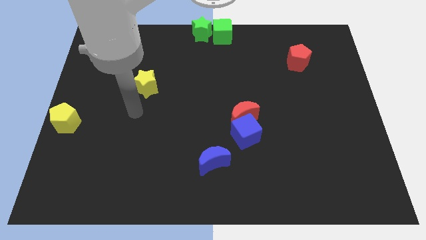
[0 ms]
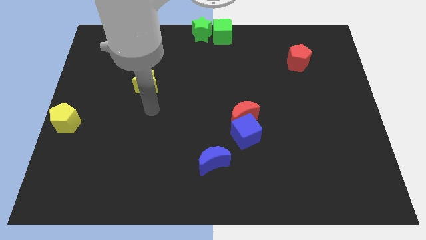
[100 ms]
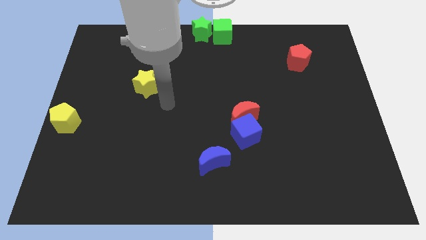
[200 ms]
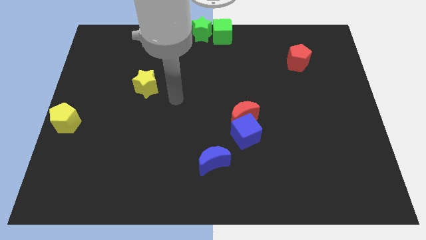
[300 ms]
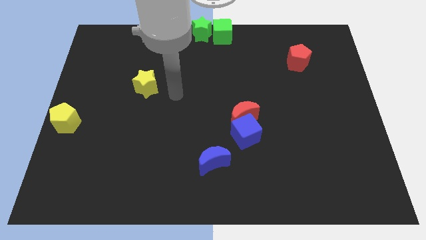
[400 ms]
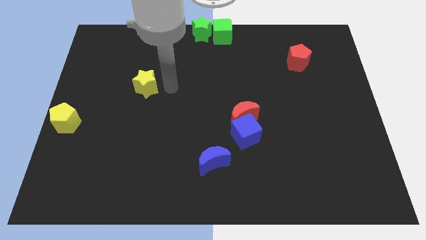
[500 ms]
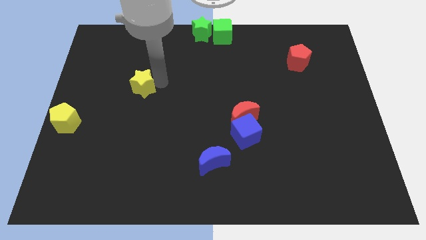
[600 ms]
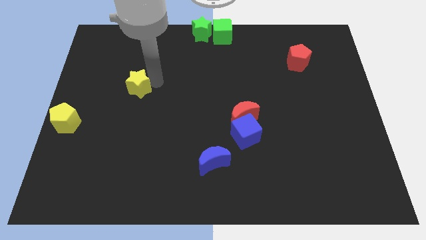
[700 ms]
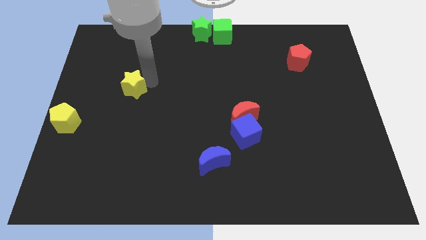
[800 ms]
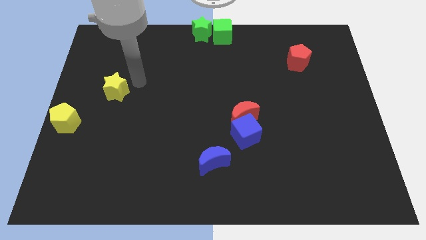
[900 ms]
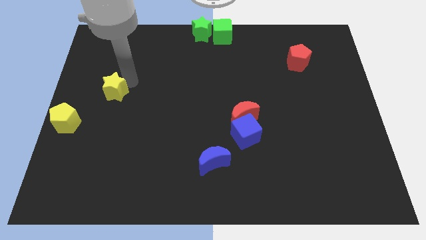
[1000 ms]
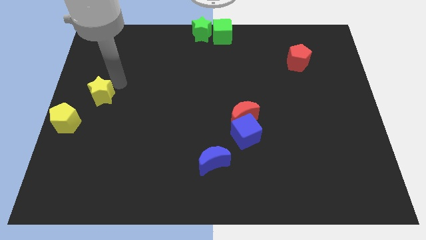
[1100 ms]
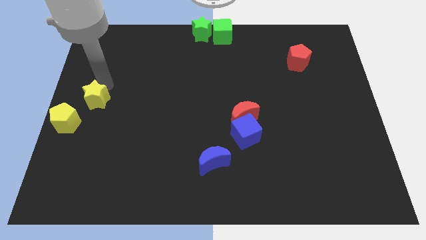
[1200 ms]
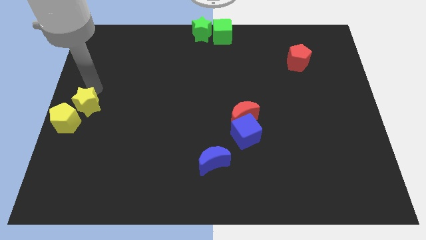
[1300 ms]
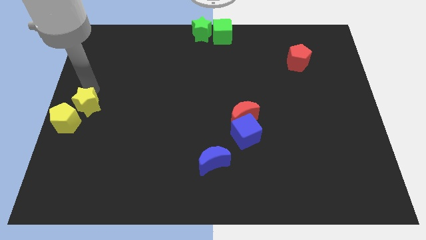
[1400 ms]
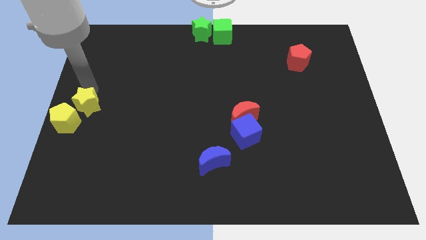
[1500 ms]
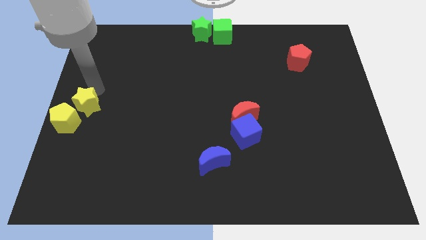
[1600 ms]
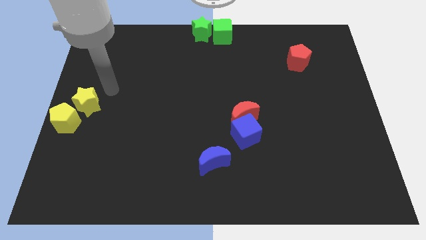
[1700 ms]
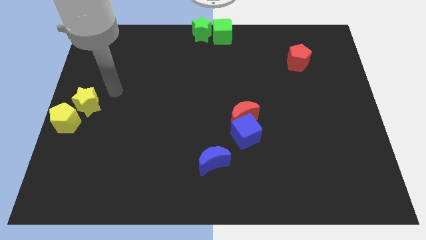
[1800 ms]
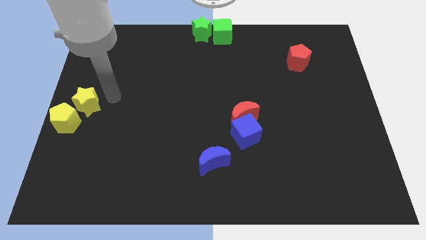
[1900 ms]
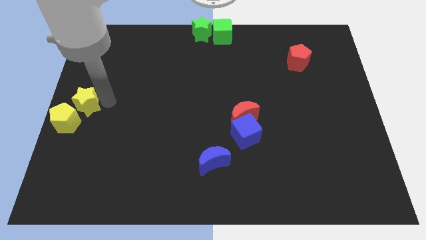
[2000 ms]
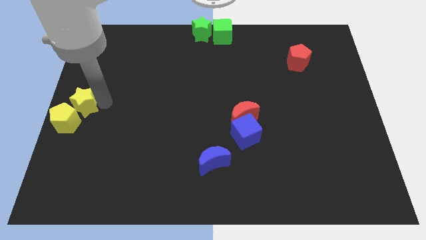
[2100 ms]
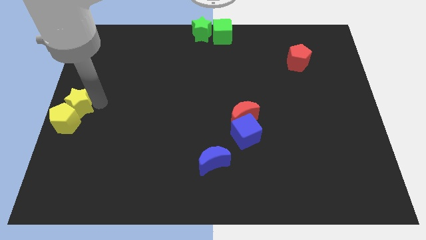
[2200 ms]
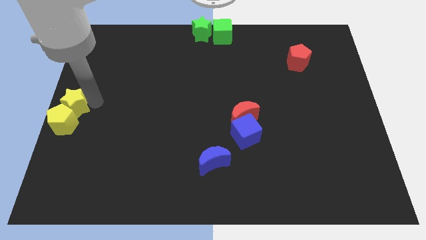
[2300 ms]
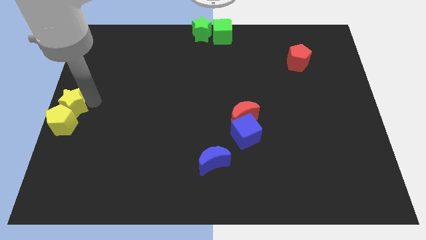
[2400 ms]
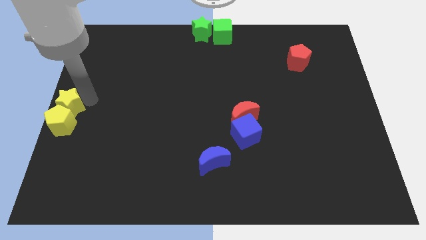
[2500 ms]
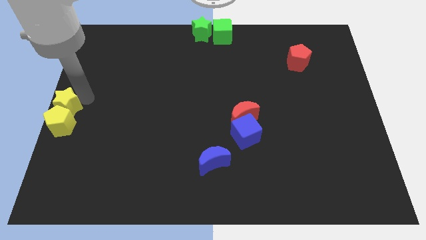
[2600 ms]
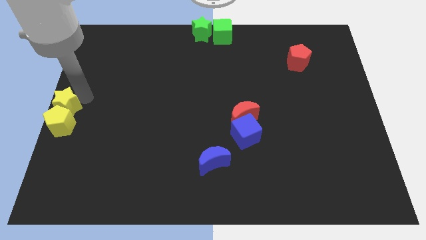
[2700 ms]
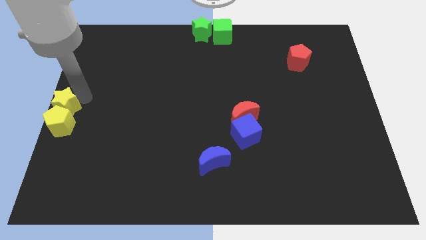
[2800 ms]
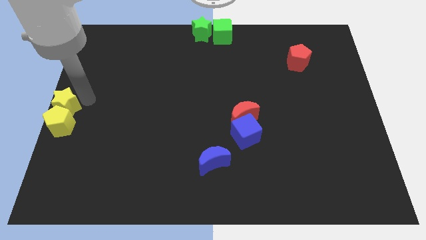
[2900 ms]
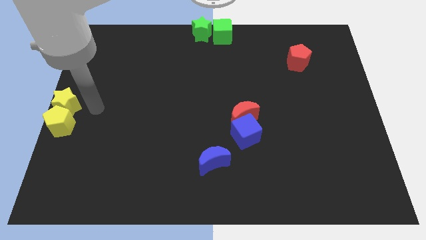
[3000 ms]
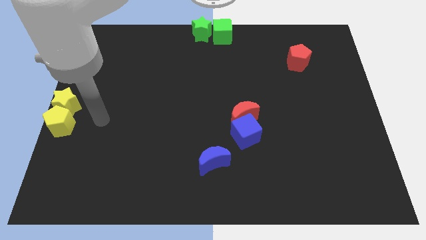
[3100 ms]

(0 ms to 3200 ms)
place the yellow star above to the yellow pentagon

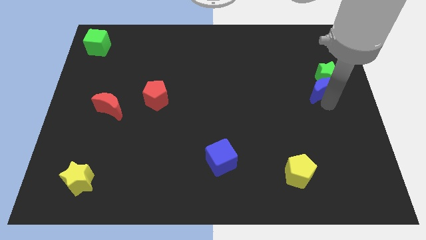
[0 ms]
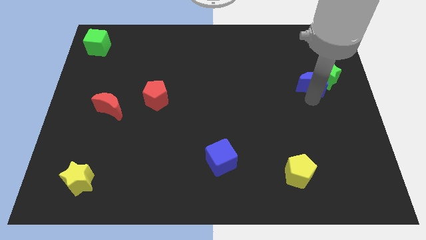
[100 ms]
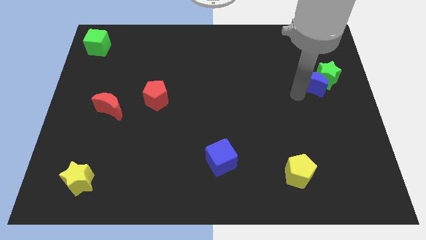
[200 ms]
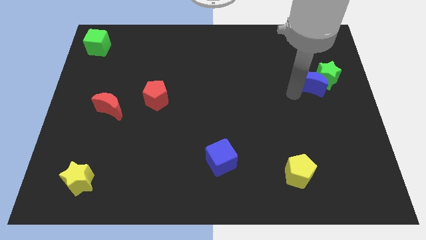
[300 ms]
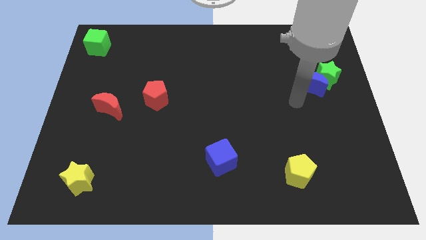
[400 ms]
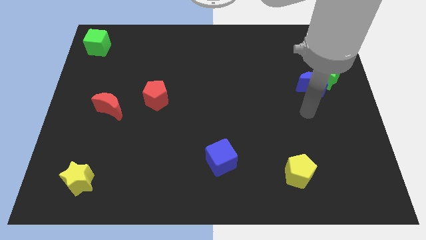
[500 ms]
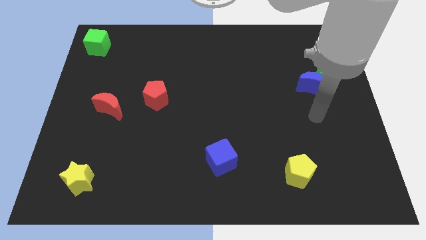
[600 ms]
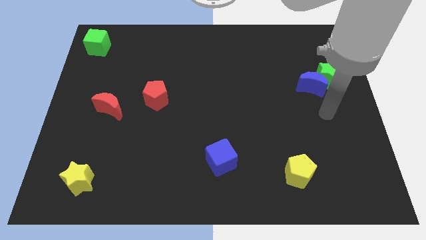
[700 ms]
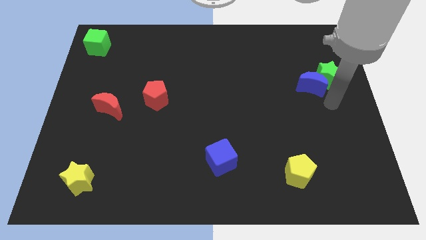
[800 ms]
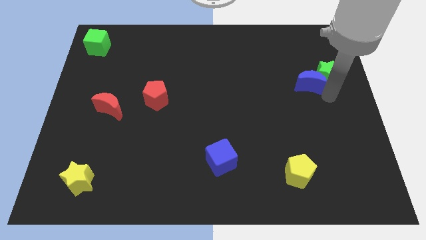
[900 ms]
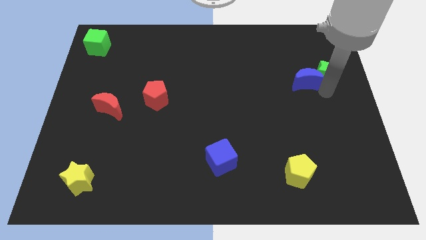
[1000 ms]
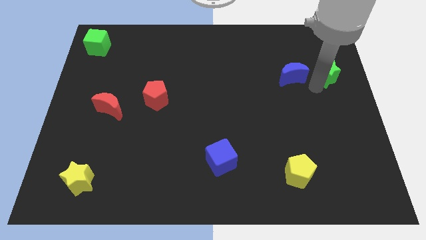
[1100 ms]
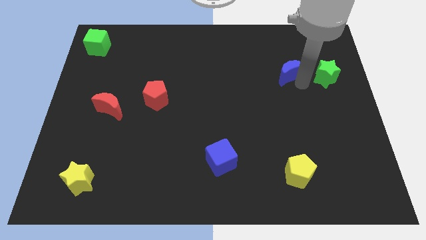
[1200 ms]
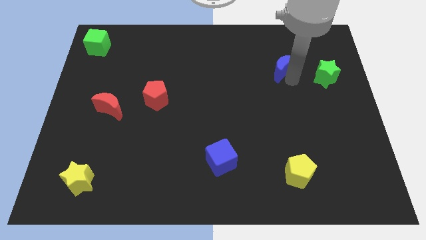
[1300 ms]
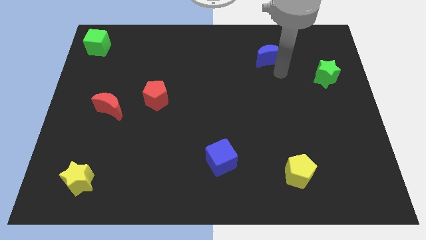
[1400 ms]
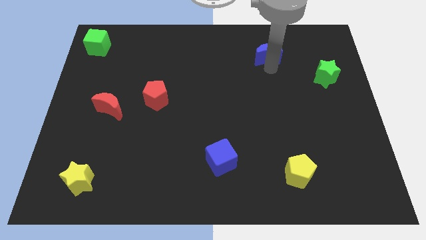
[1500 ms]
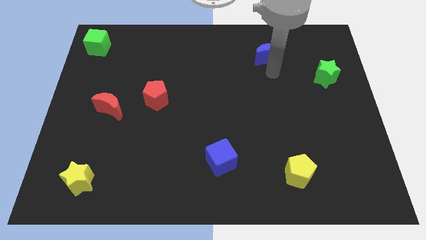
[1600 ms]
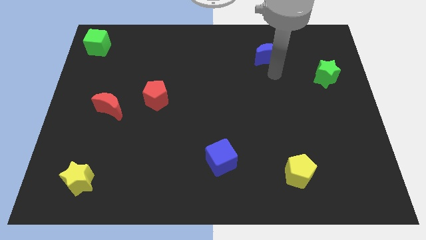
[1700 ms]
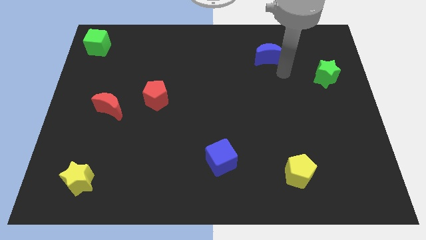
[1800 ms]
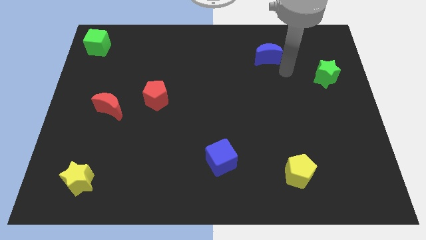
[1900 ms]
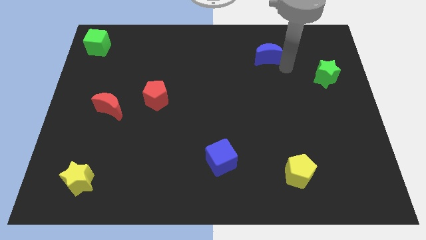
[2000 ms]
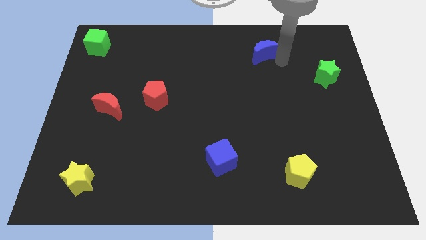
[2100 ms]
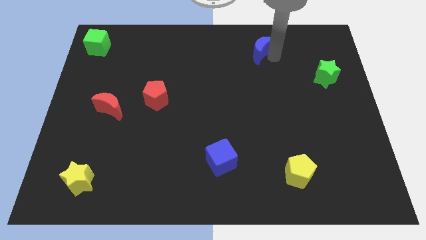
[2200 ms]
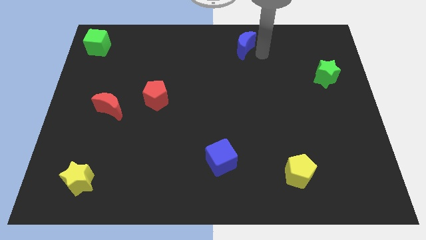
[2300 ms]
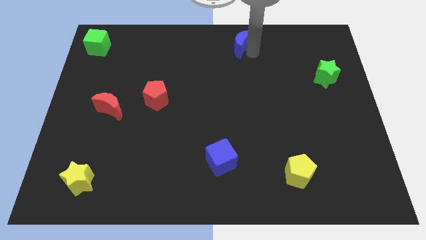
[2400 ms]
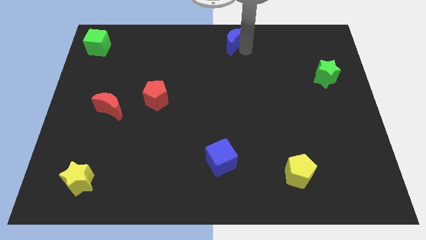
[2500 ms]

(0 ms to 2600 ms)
separate blue moon from green star

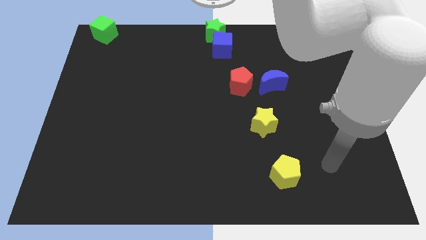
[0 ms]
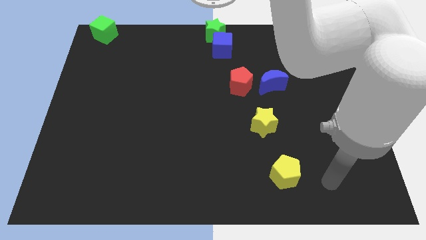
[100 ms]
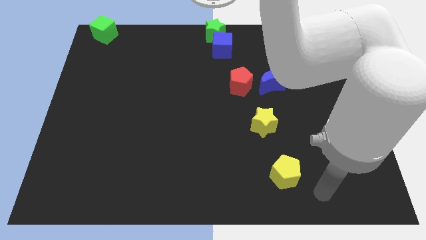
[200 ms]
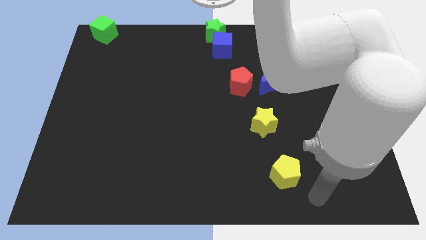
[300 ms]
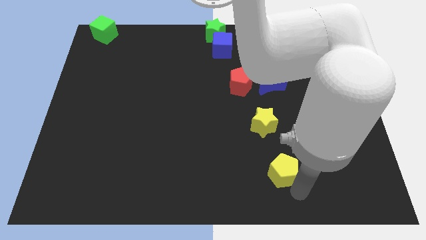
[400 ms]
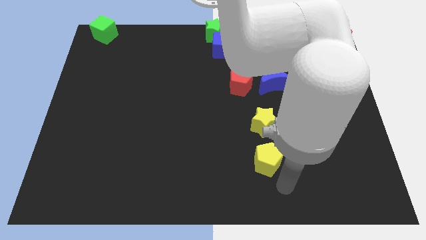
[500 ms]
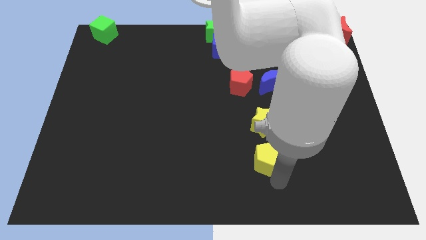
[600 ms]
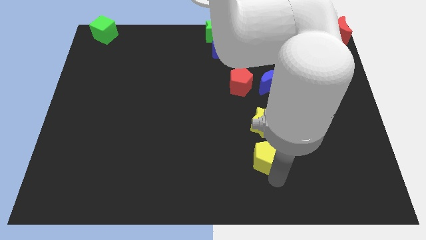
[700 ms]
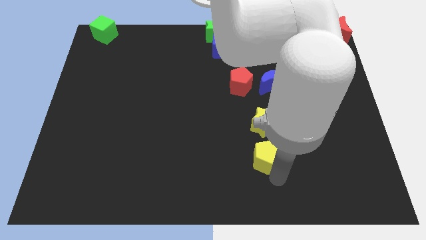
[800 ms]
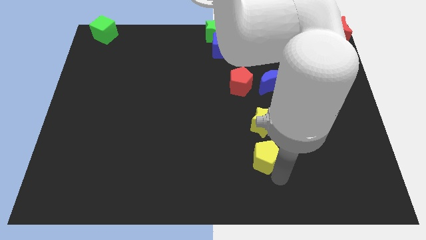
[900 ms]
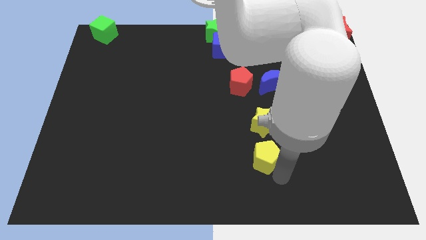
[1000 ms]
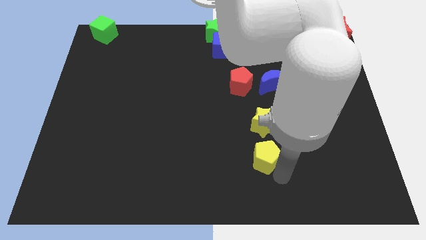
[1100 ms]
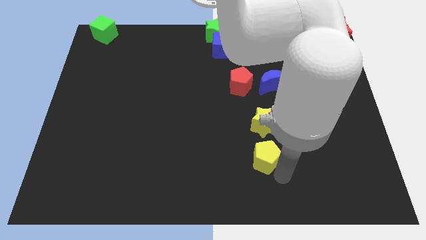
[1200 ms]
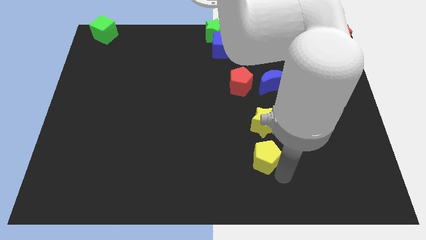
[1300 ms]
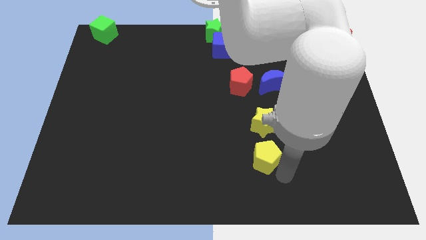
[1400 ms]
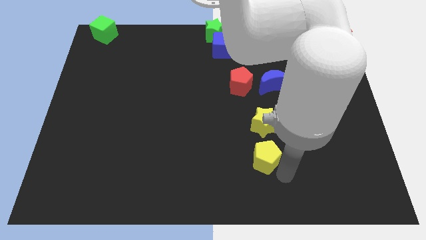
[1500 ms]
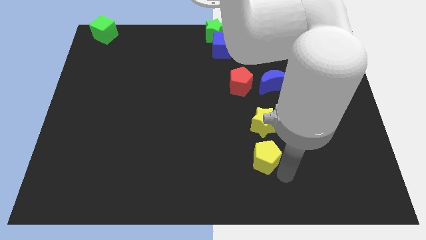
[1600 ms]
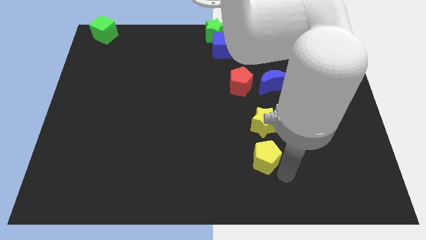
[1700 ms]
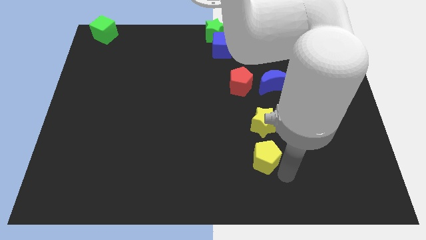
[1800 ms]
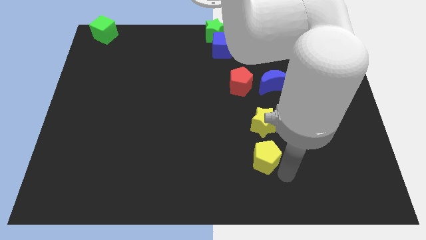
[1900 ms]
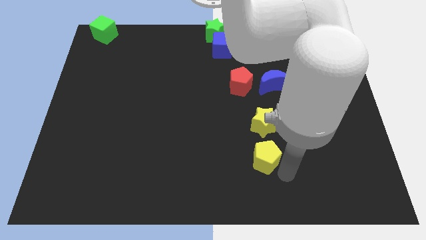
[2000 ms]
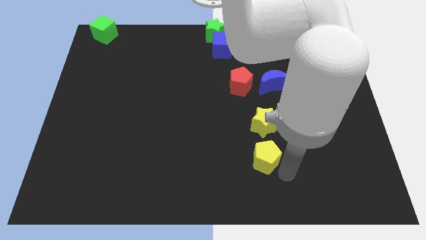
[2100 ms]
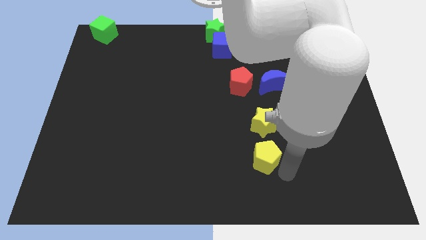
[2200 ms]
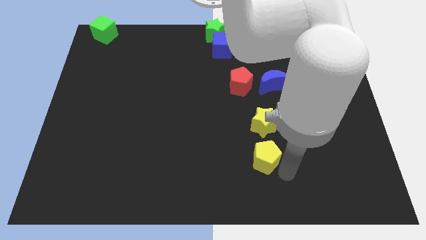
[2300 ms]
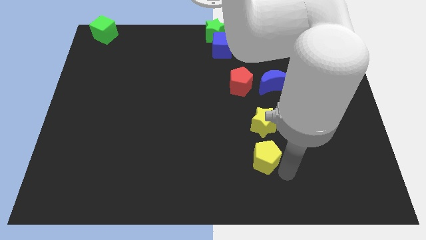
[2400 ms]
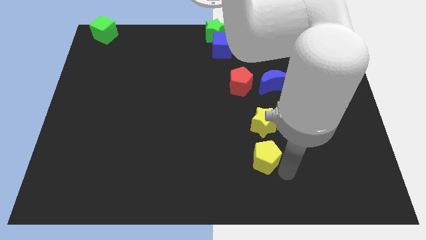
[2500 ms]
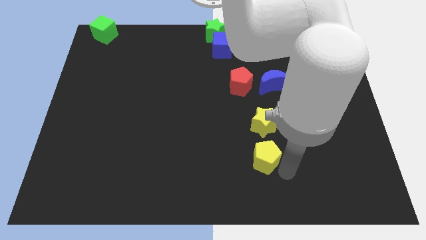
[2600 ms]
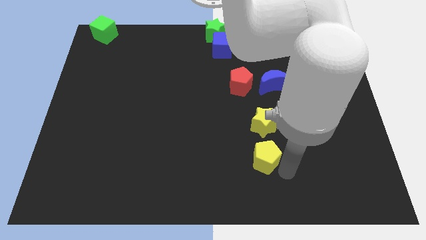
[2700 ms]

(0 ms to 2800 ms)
adjust the yellow pentagon to the bottom of the yellow star

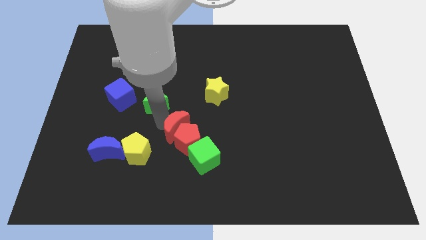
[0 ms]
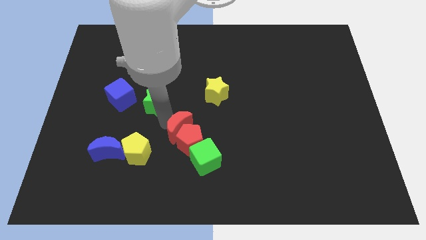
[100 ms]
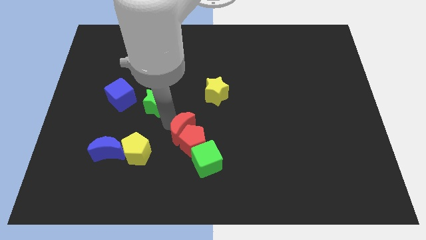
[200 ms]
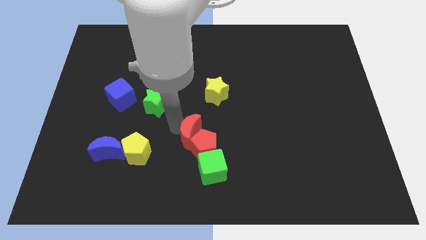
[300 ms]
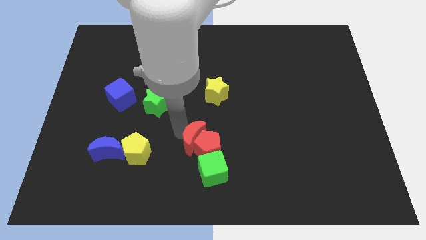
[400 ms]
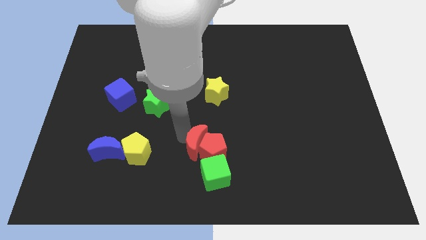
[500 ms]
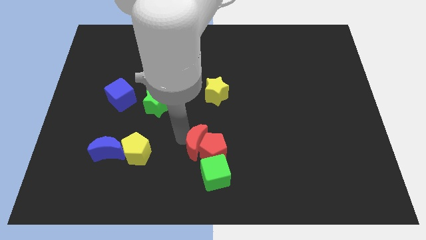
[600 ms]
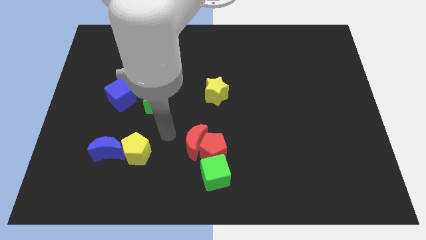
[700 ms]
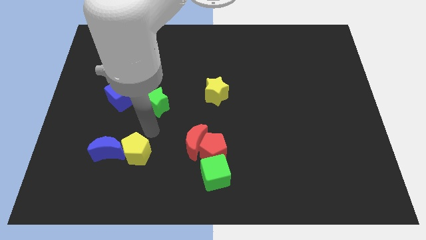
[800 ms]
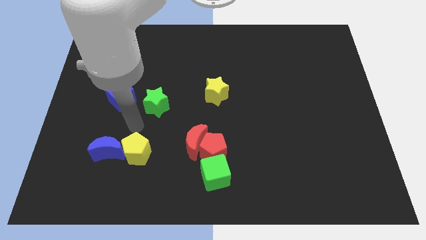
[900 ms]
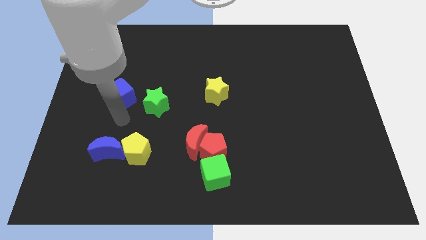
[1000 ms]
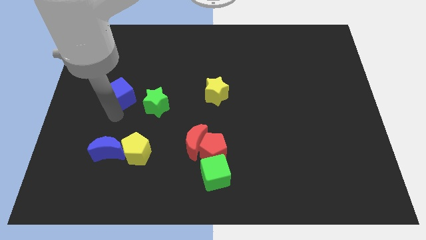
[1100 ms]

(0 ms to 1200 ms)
move red blocks and green cube slightly to the bottom
